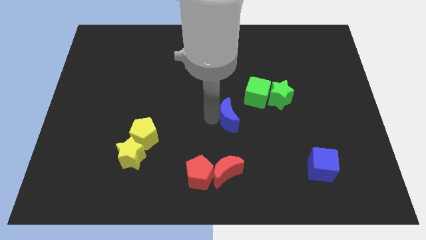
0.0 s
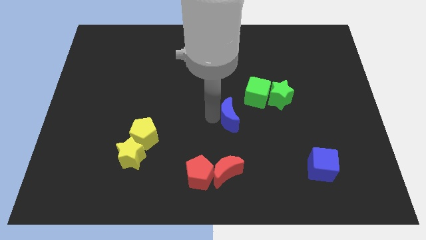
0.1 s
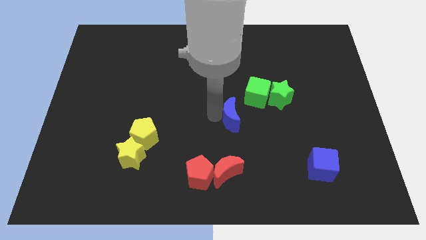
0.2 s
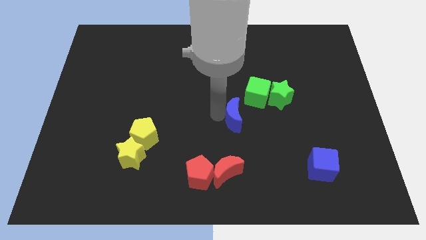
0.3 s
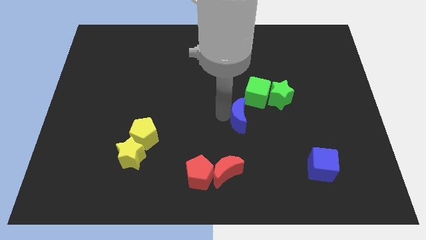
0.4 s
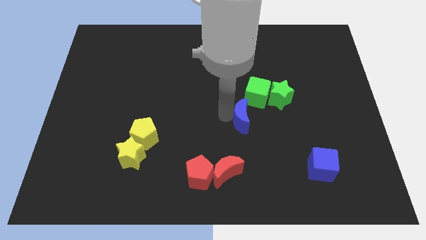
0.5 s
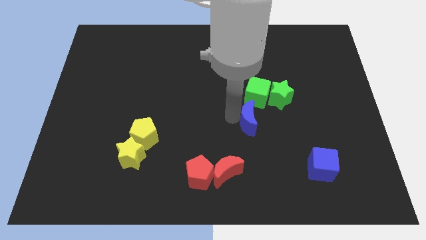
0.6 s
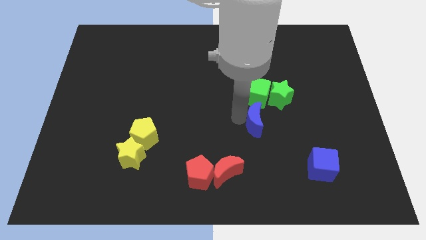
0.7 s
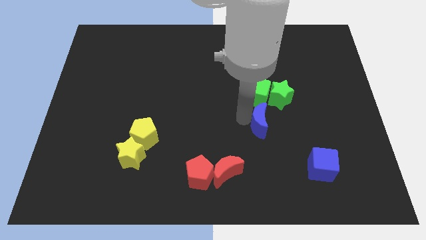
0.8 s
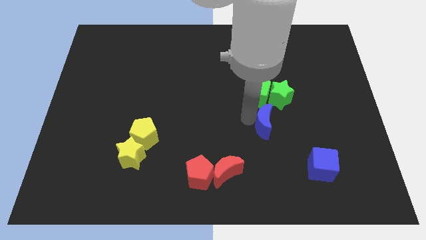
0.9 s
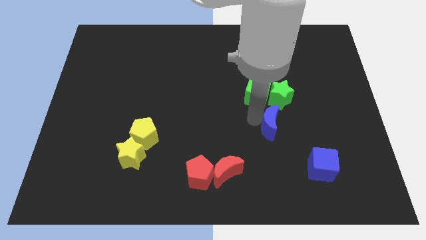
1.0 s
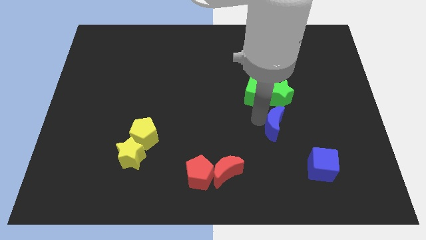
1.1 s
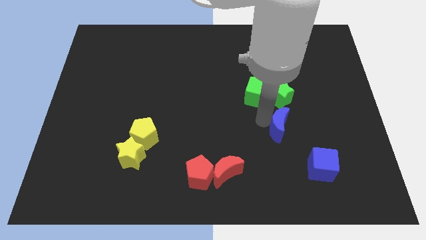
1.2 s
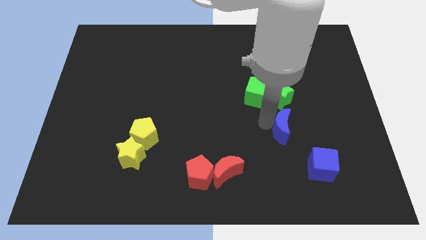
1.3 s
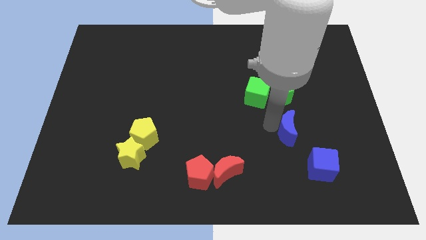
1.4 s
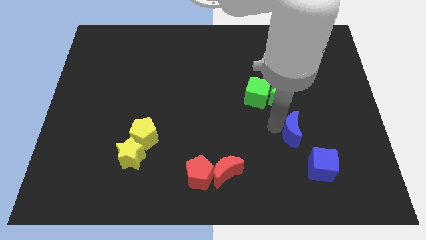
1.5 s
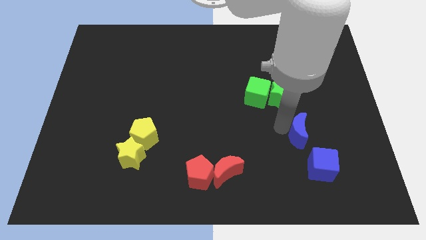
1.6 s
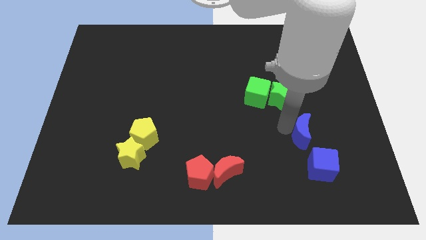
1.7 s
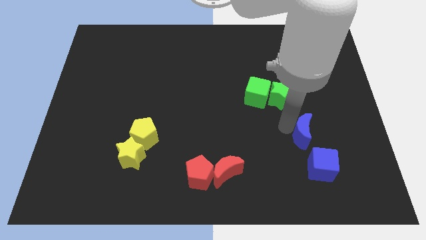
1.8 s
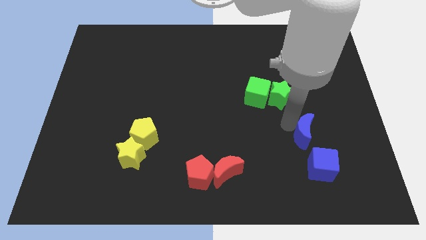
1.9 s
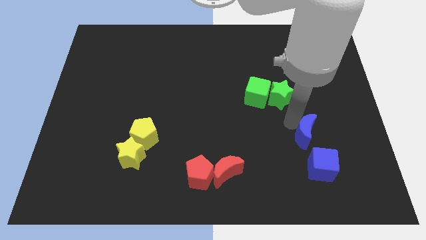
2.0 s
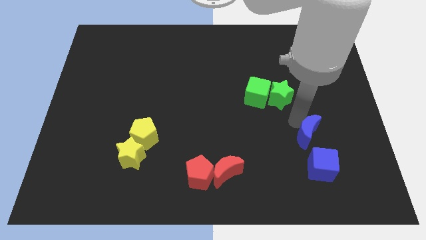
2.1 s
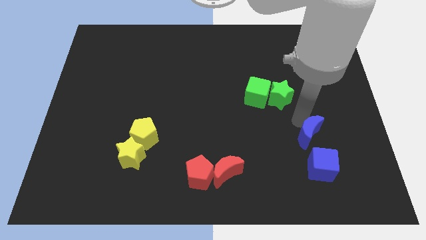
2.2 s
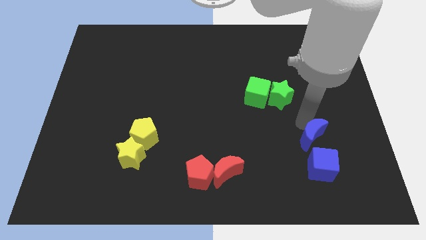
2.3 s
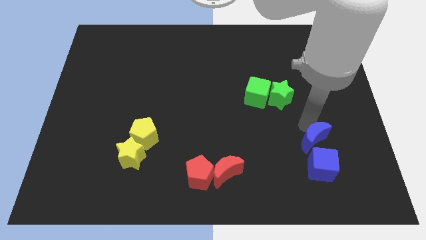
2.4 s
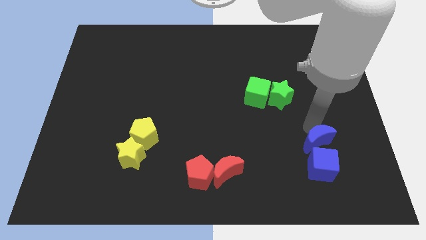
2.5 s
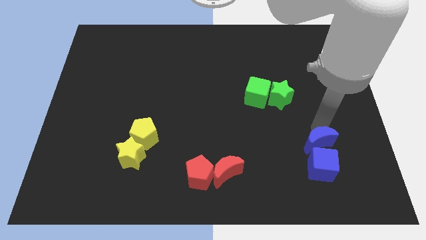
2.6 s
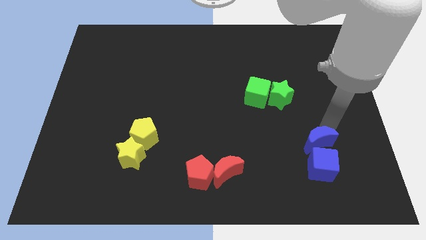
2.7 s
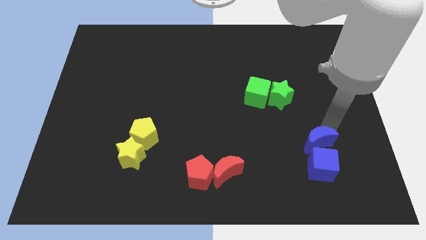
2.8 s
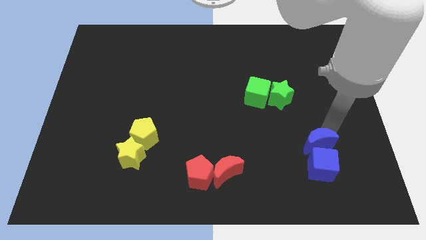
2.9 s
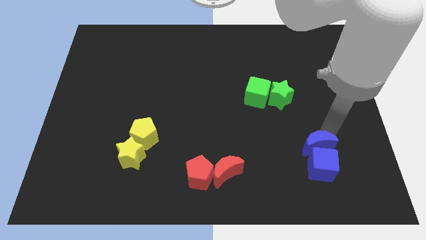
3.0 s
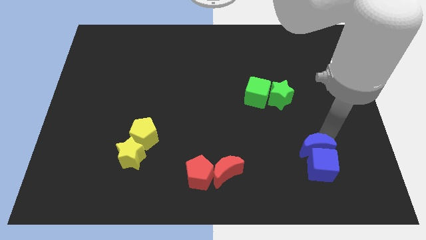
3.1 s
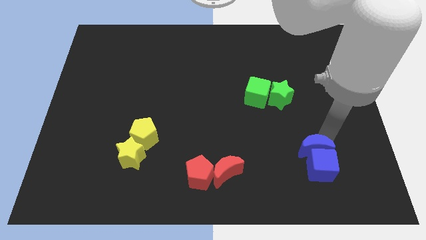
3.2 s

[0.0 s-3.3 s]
attach the blue moon to the blue cube

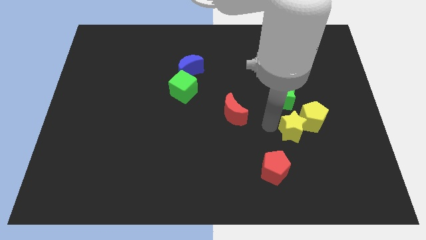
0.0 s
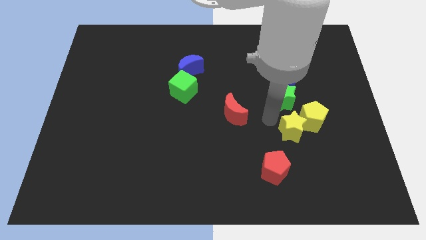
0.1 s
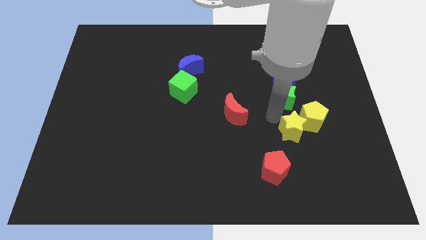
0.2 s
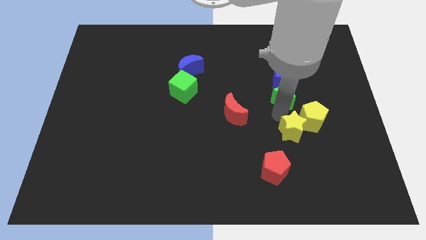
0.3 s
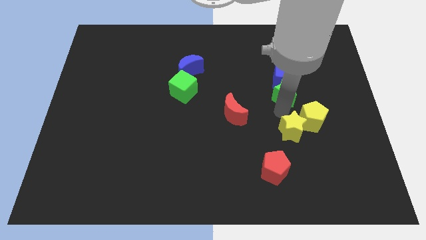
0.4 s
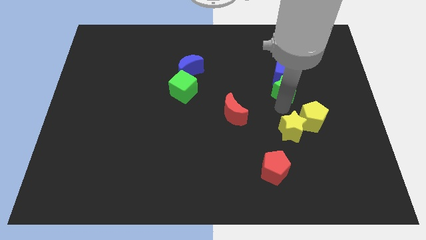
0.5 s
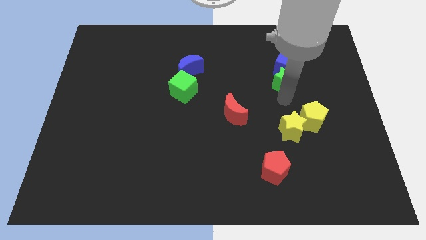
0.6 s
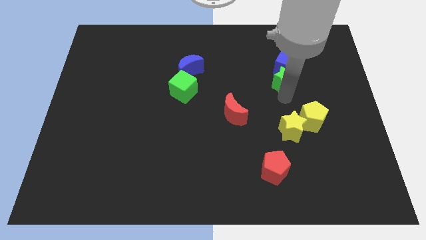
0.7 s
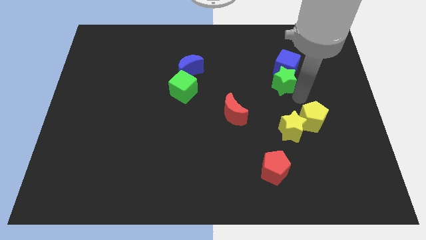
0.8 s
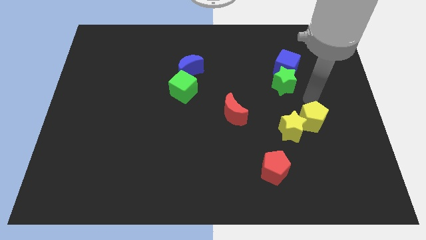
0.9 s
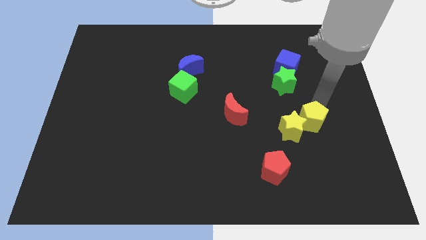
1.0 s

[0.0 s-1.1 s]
place green star below blue moon

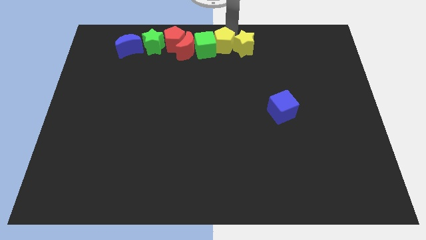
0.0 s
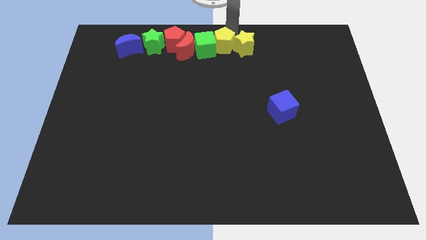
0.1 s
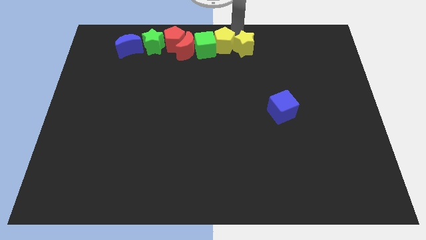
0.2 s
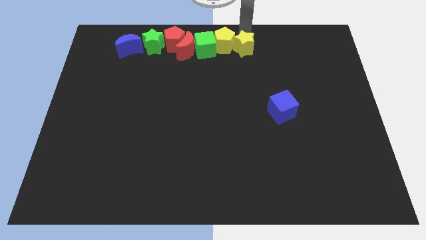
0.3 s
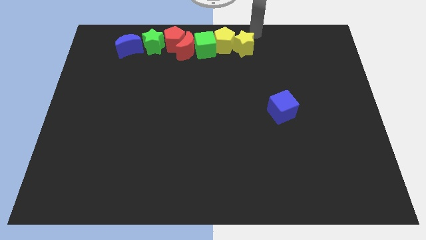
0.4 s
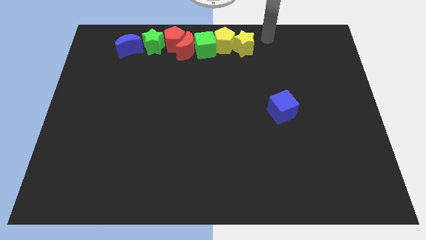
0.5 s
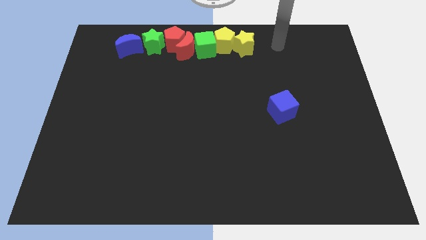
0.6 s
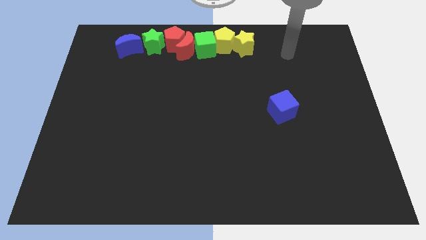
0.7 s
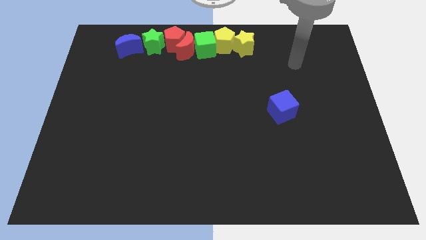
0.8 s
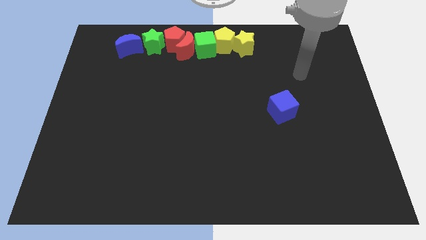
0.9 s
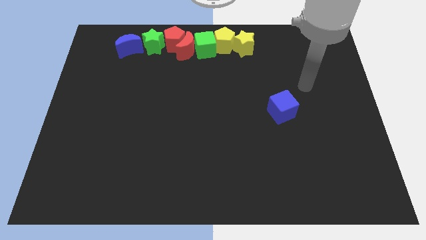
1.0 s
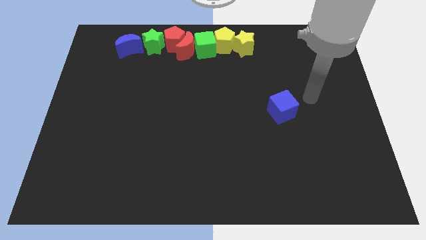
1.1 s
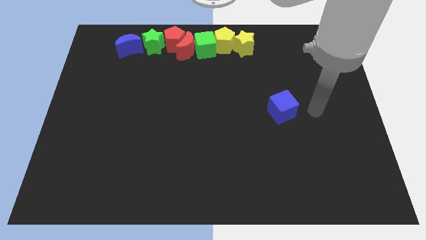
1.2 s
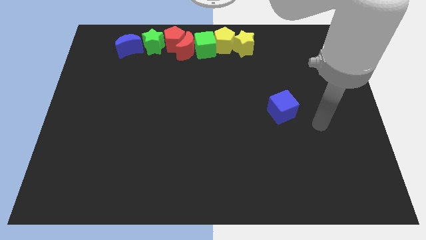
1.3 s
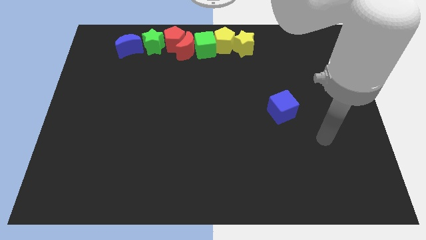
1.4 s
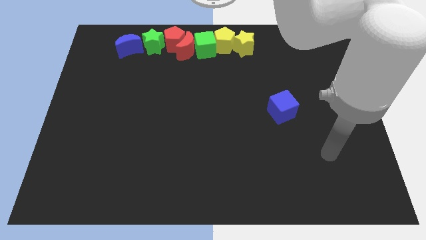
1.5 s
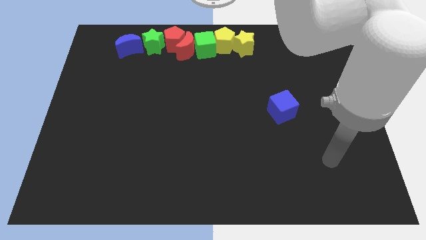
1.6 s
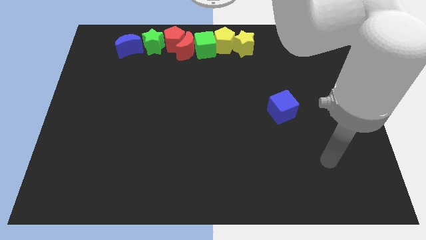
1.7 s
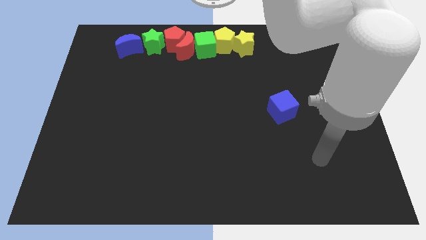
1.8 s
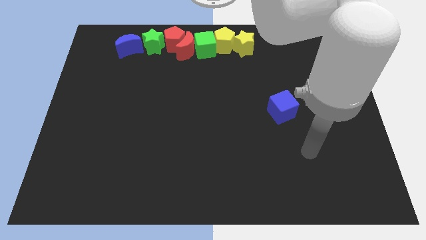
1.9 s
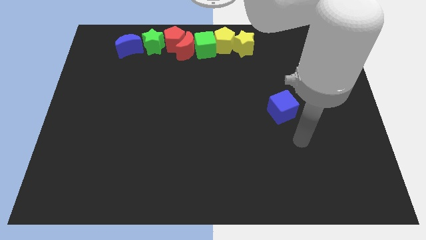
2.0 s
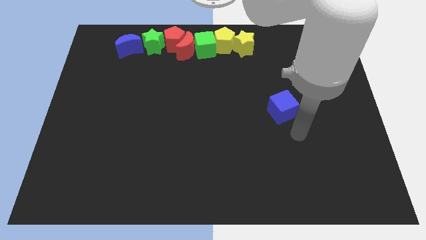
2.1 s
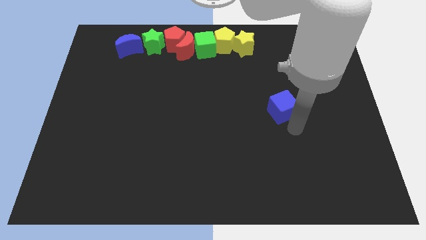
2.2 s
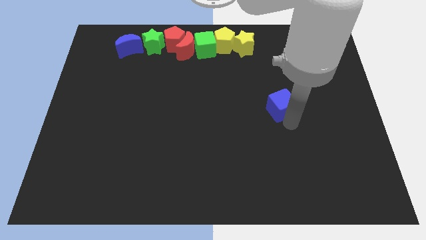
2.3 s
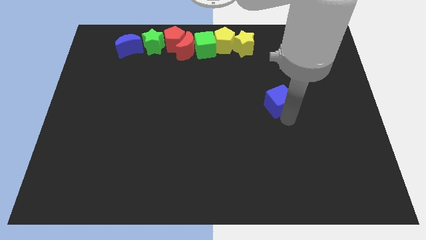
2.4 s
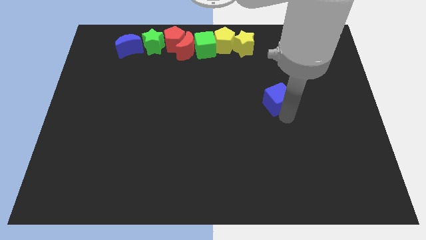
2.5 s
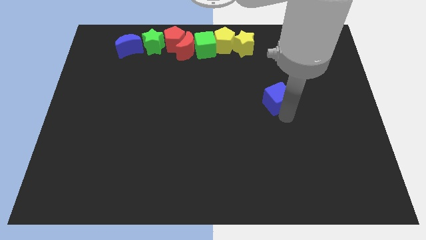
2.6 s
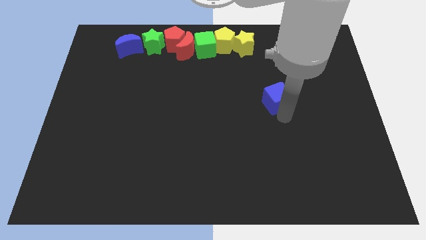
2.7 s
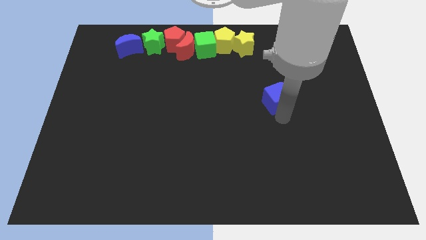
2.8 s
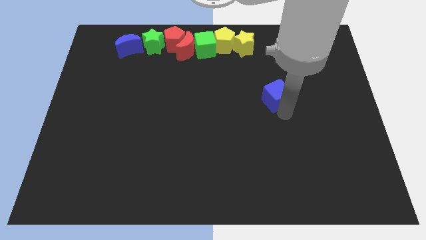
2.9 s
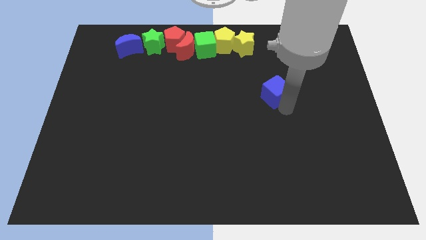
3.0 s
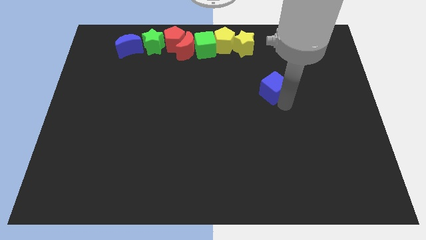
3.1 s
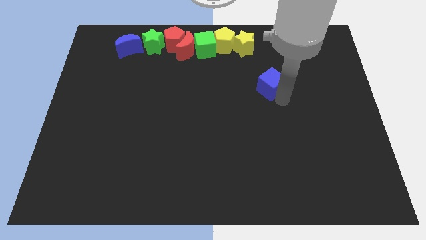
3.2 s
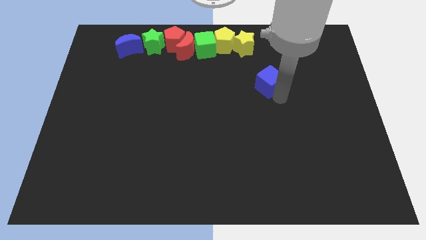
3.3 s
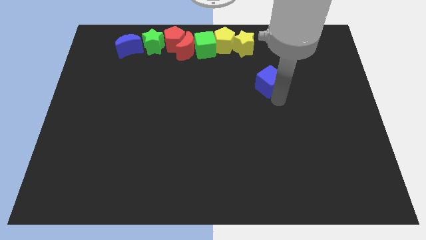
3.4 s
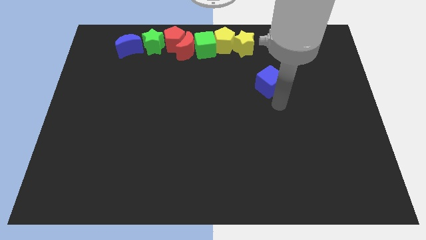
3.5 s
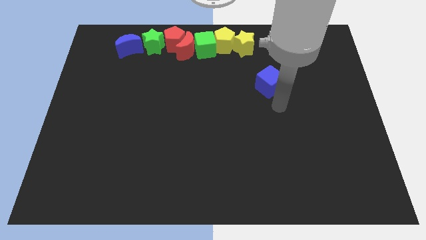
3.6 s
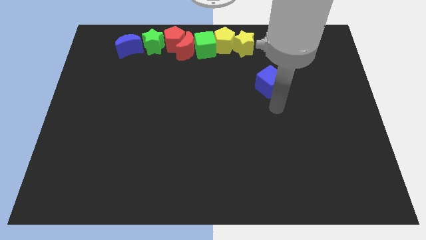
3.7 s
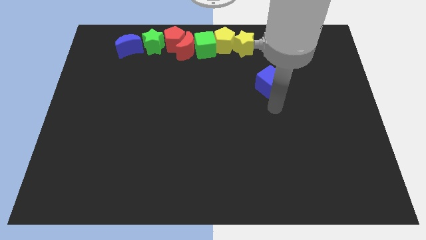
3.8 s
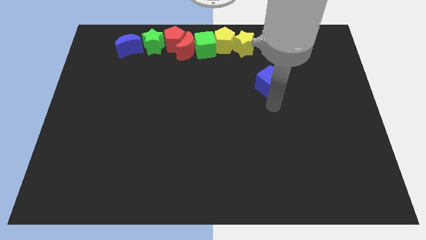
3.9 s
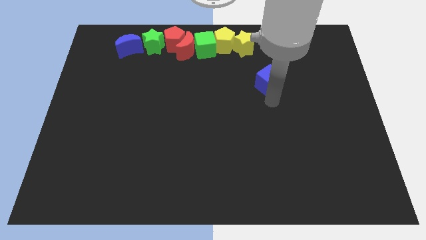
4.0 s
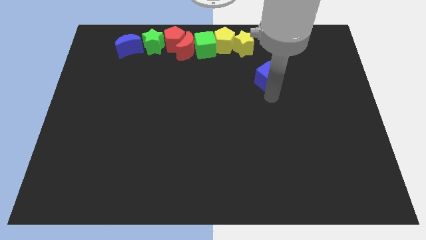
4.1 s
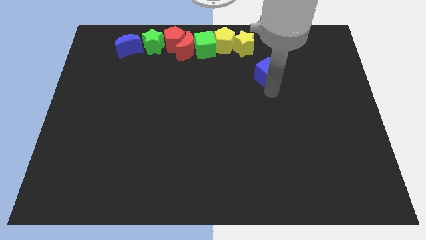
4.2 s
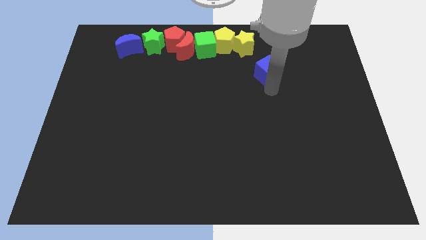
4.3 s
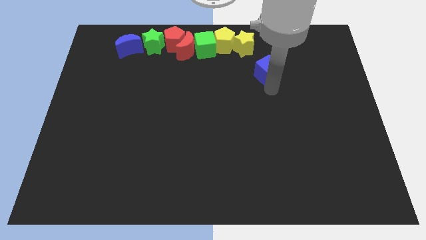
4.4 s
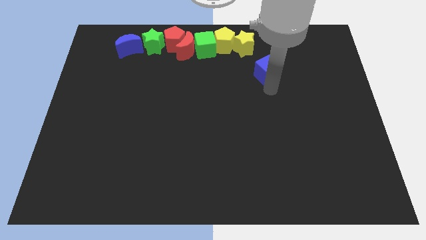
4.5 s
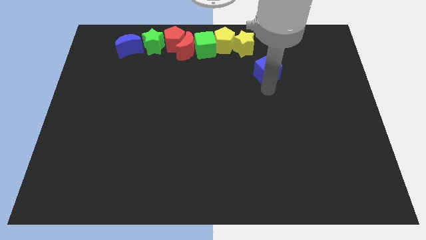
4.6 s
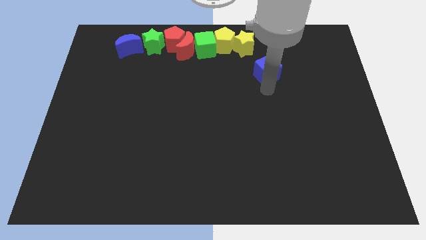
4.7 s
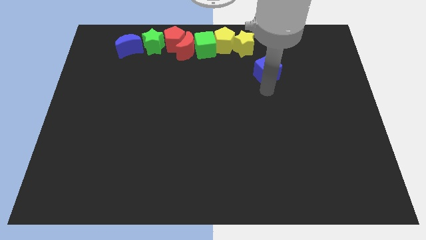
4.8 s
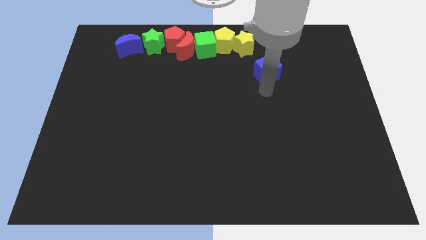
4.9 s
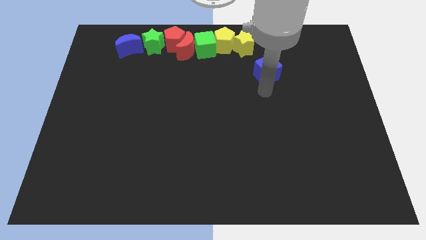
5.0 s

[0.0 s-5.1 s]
move the blue cube towards the bottom side of the yellow star
